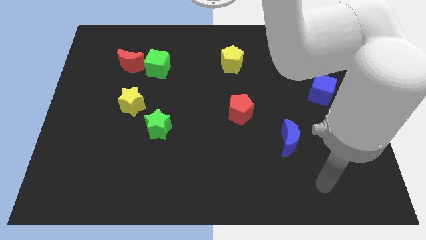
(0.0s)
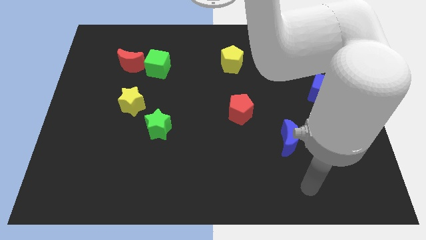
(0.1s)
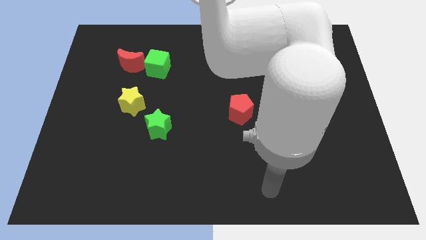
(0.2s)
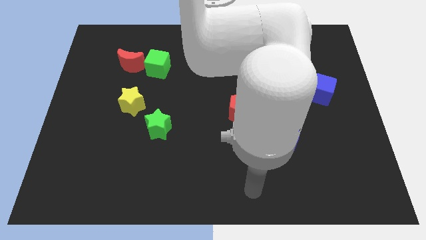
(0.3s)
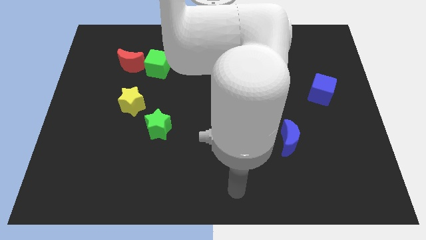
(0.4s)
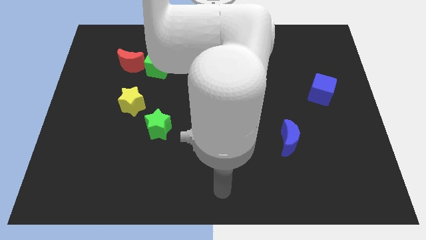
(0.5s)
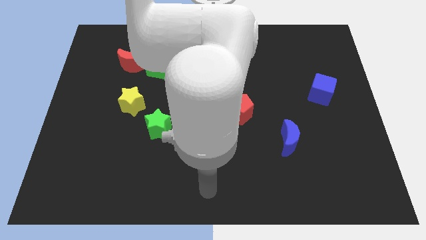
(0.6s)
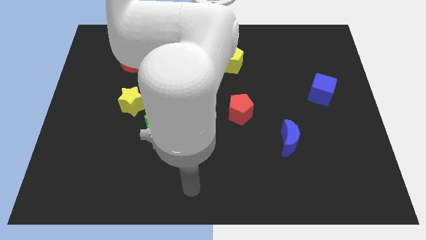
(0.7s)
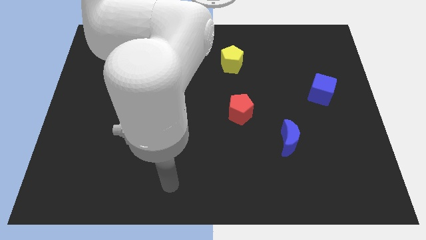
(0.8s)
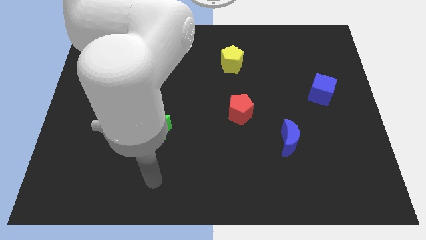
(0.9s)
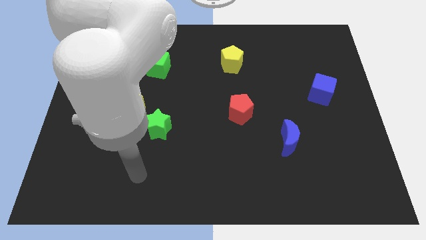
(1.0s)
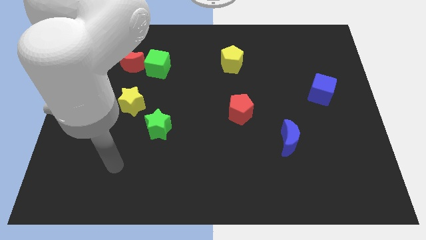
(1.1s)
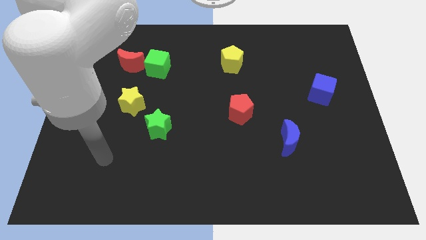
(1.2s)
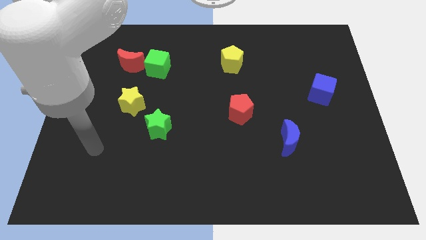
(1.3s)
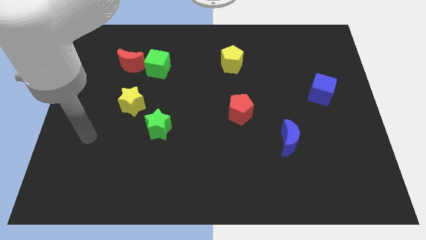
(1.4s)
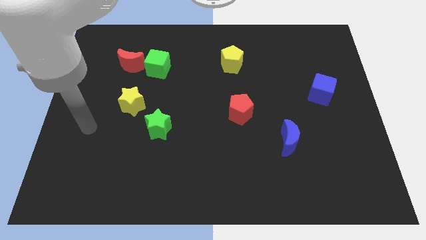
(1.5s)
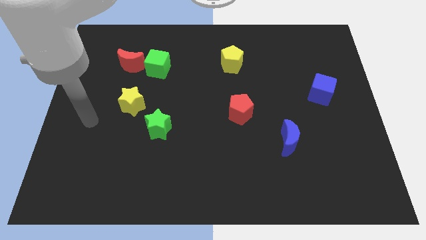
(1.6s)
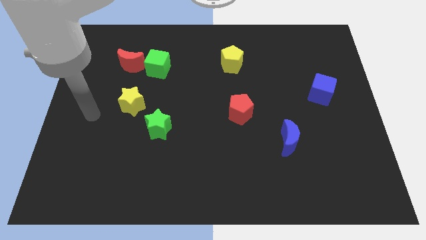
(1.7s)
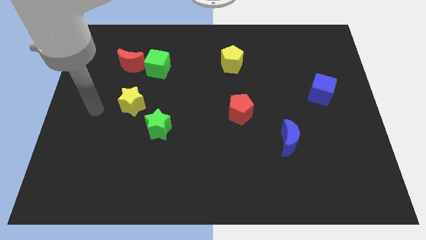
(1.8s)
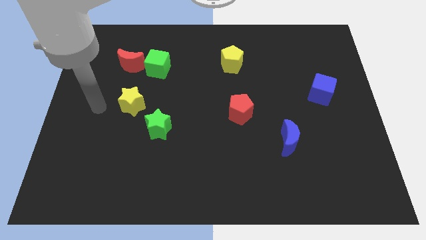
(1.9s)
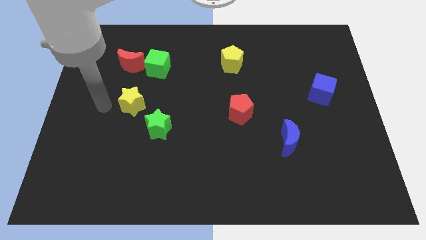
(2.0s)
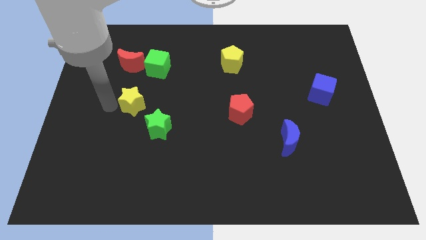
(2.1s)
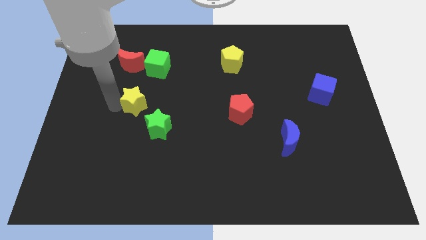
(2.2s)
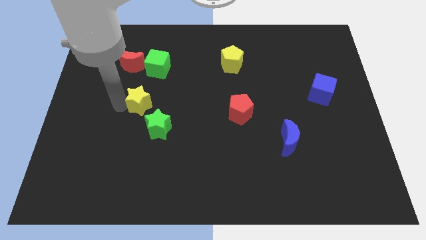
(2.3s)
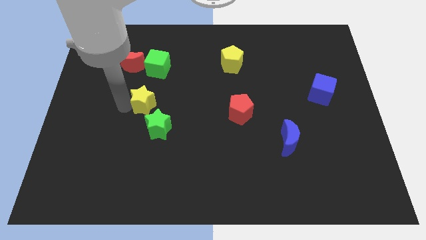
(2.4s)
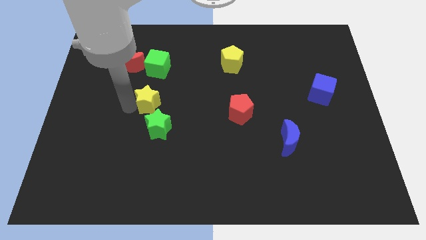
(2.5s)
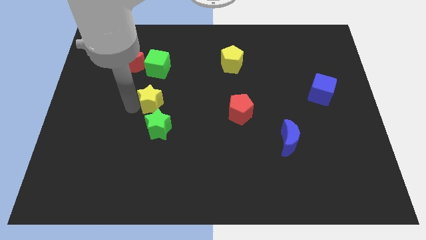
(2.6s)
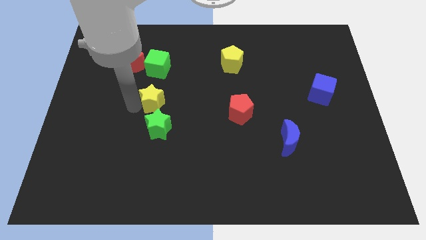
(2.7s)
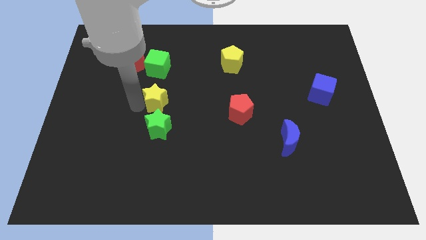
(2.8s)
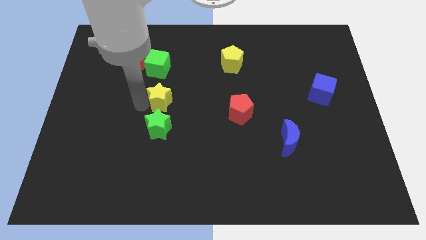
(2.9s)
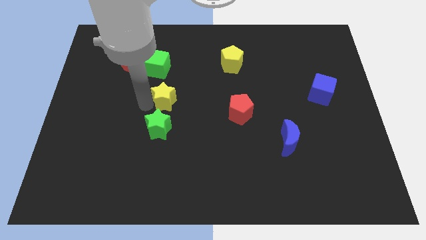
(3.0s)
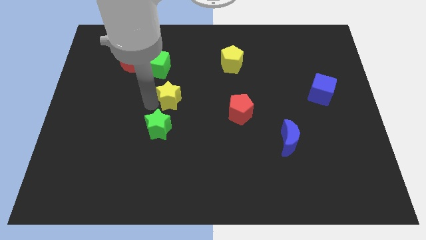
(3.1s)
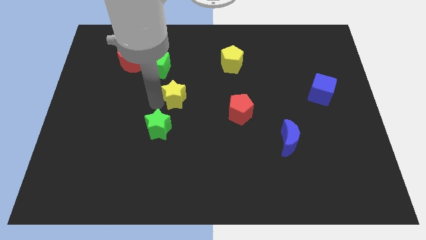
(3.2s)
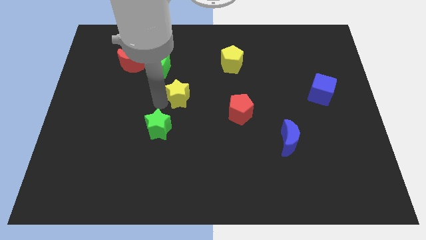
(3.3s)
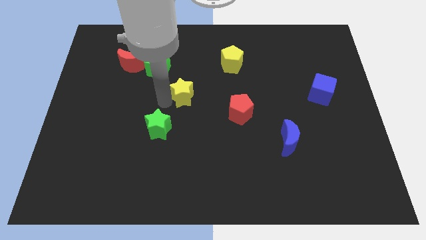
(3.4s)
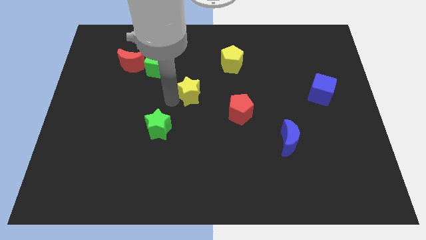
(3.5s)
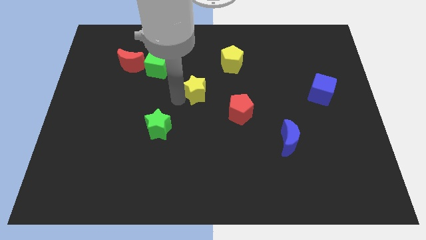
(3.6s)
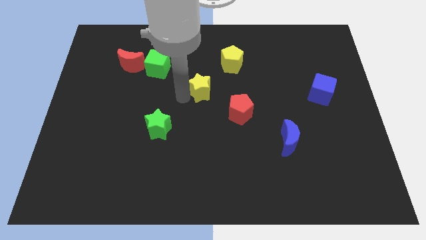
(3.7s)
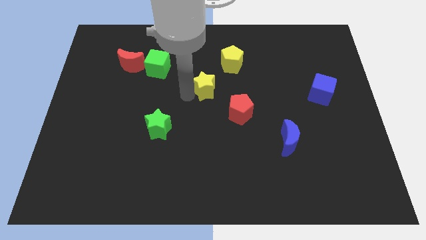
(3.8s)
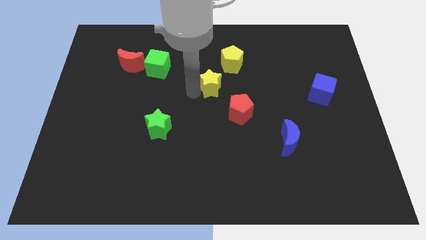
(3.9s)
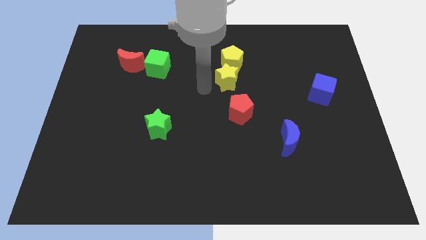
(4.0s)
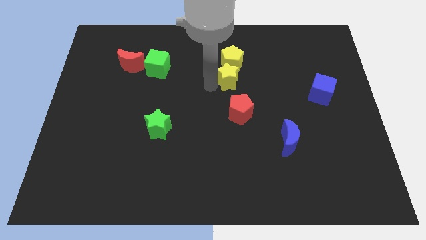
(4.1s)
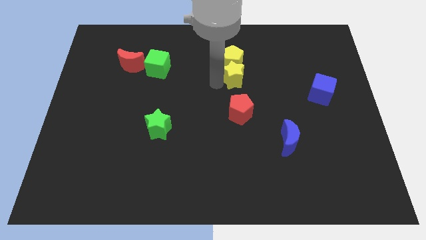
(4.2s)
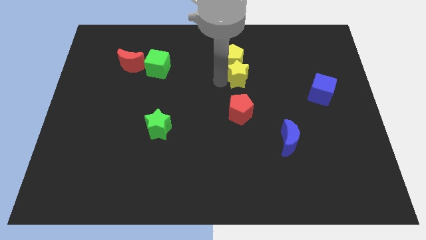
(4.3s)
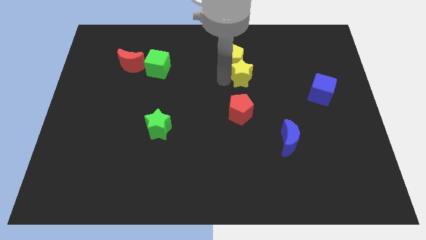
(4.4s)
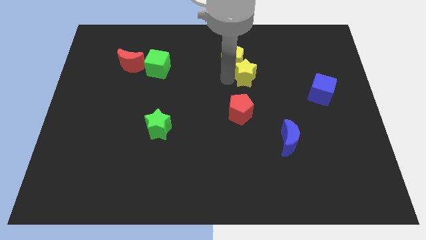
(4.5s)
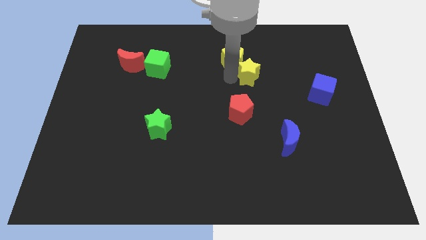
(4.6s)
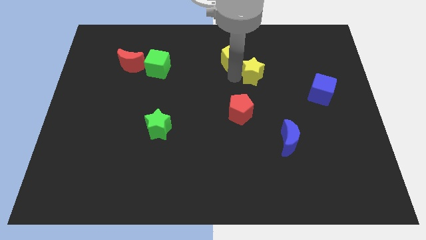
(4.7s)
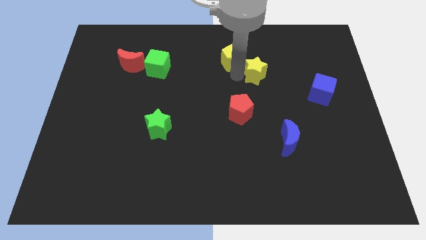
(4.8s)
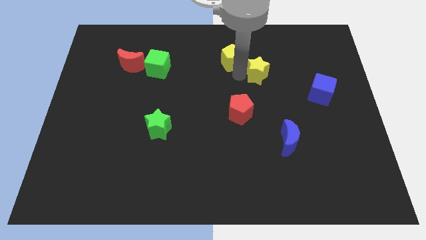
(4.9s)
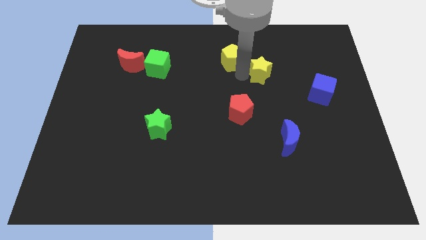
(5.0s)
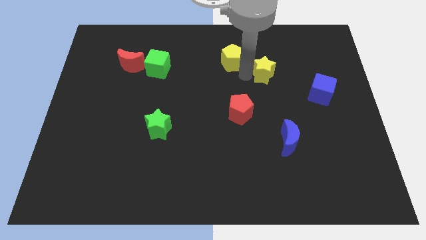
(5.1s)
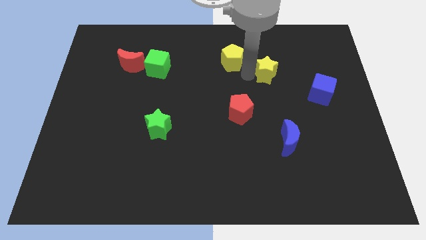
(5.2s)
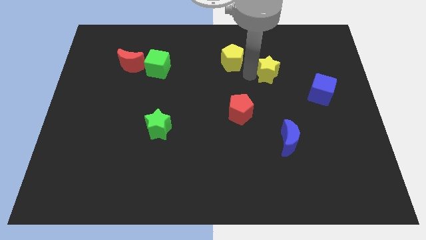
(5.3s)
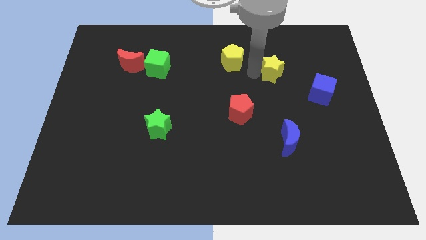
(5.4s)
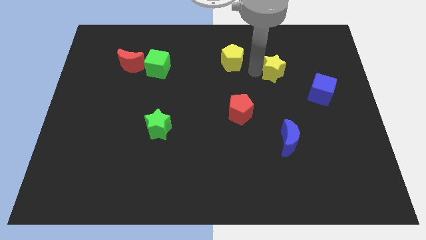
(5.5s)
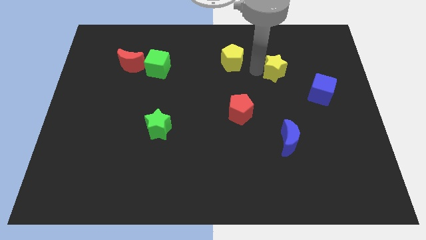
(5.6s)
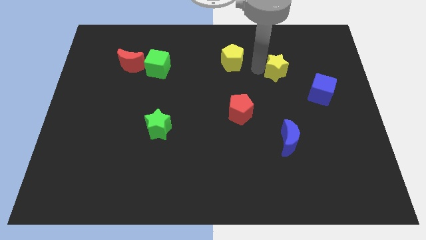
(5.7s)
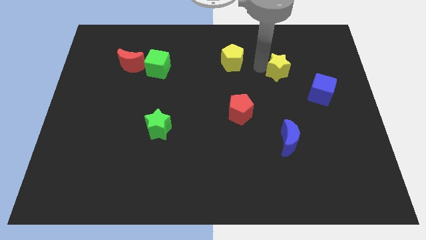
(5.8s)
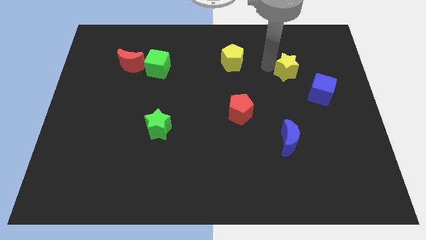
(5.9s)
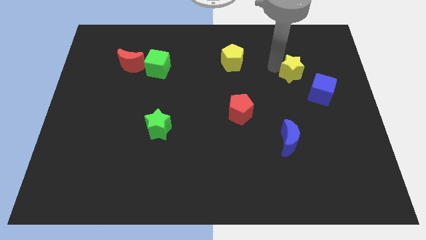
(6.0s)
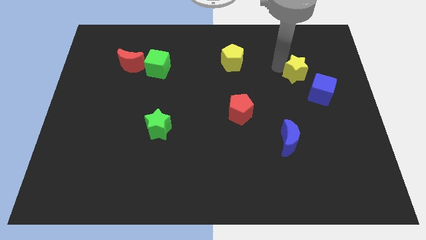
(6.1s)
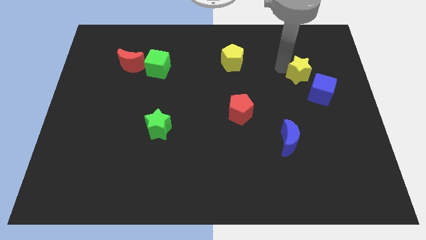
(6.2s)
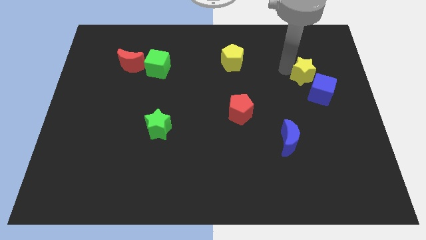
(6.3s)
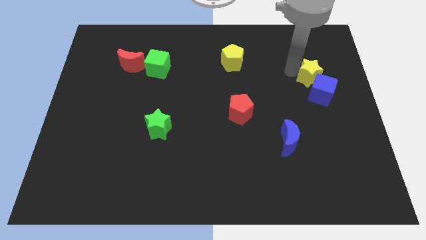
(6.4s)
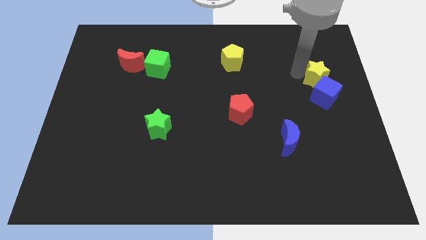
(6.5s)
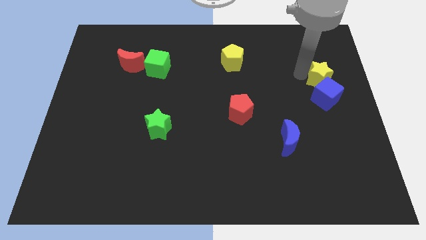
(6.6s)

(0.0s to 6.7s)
slide the yellow star towards the blue cube

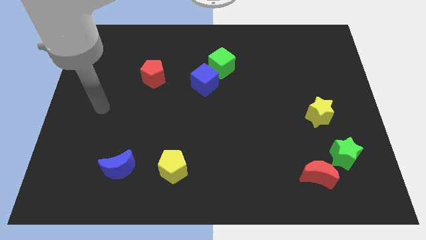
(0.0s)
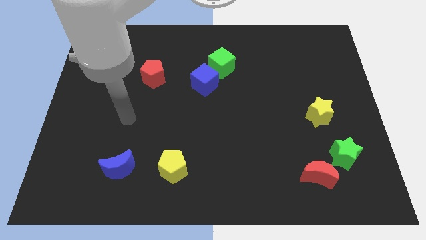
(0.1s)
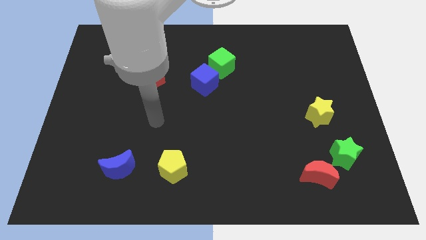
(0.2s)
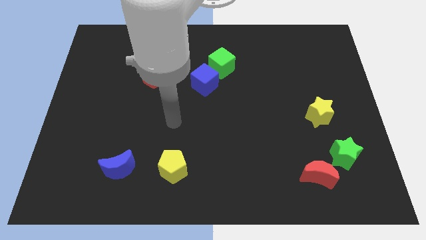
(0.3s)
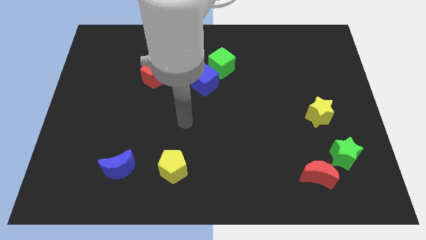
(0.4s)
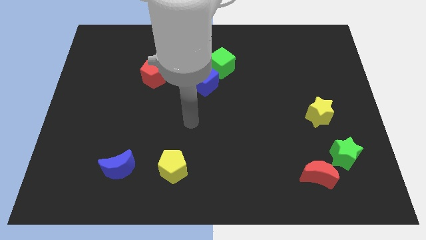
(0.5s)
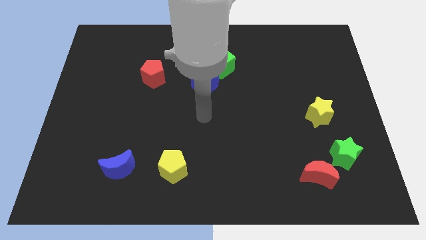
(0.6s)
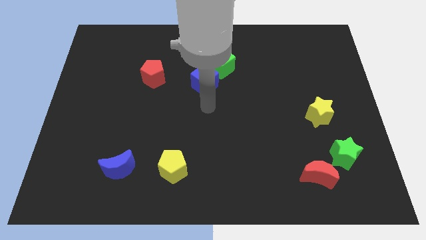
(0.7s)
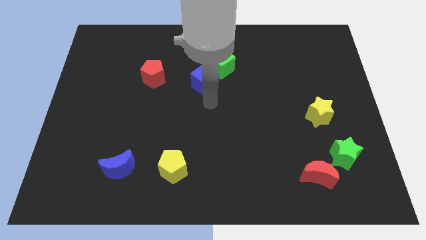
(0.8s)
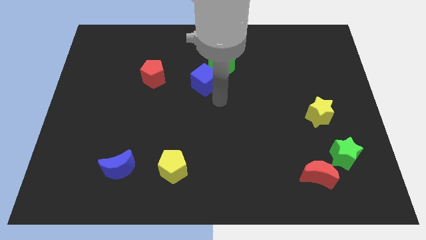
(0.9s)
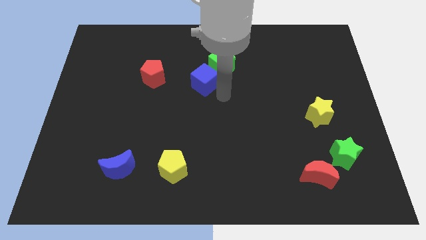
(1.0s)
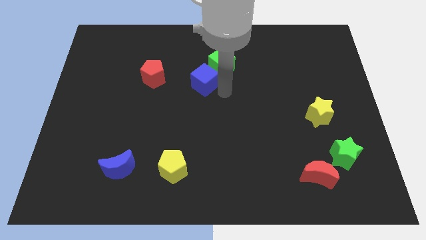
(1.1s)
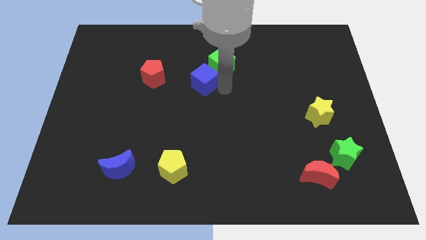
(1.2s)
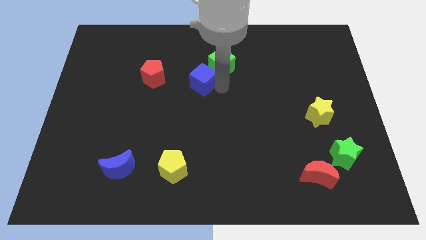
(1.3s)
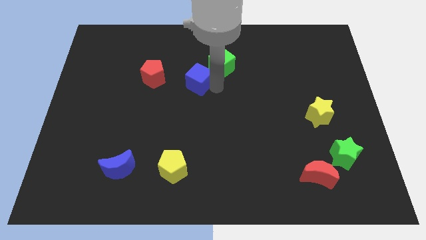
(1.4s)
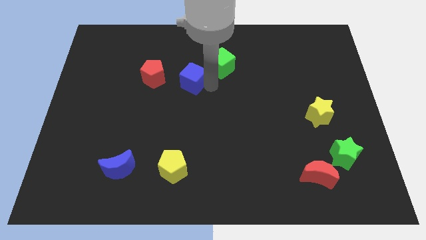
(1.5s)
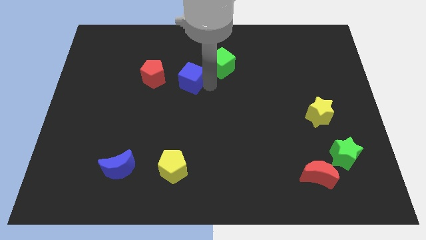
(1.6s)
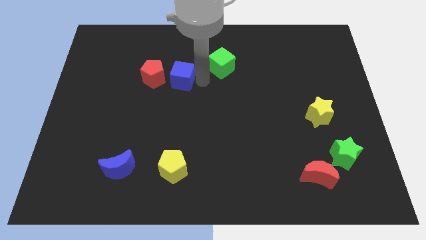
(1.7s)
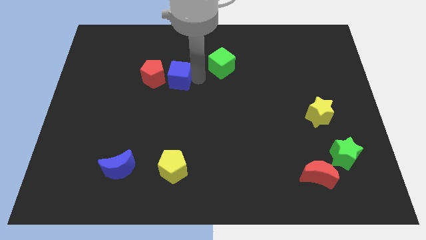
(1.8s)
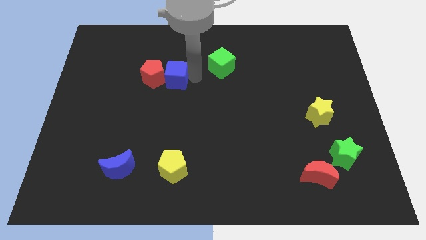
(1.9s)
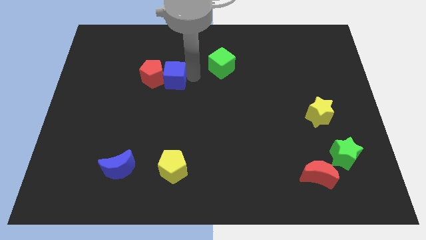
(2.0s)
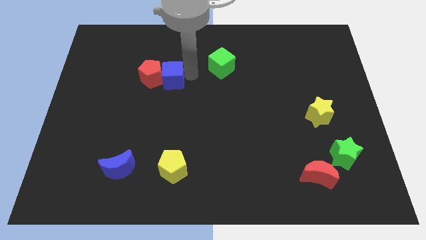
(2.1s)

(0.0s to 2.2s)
push the blue cube towards the red pentagon
